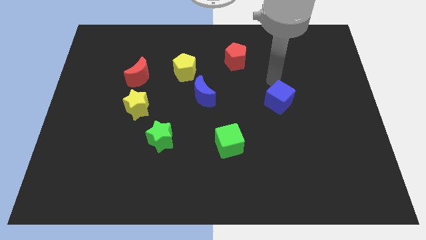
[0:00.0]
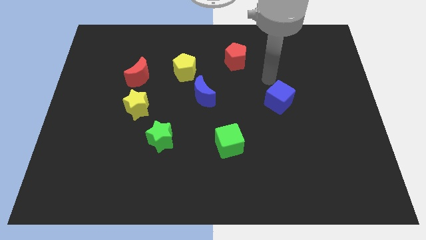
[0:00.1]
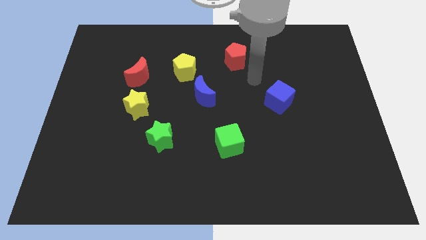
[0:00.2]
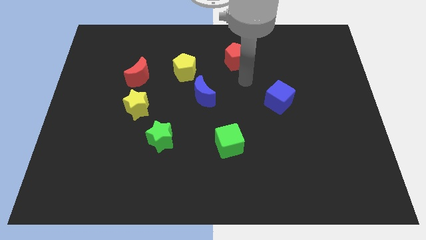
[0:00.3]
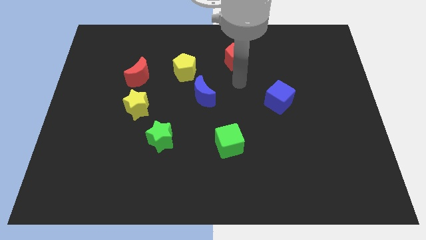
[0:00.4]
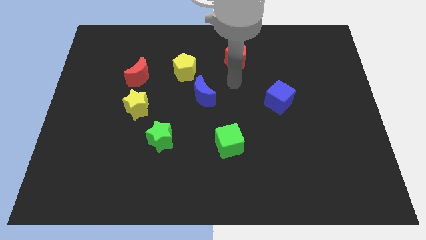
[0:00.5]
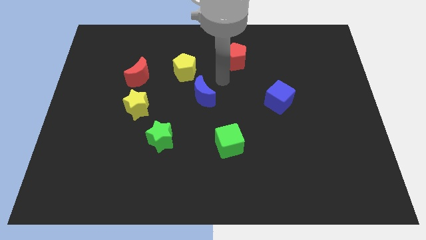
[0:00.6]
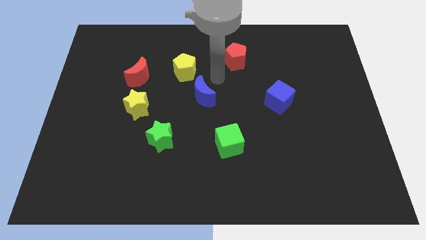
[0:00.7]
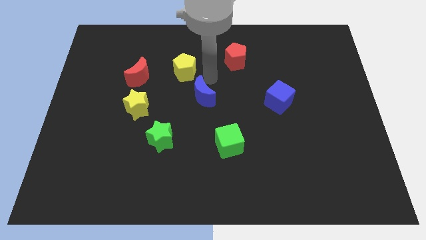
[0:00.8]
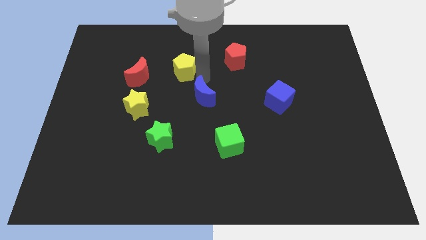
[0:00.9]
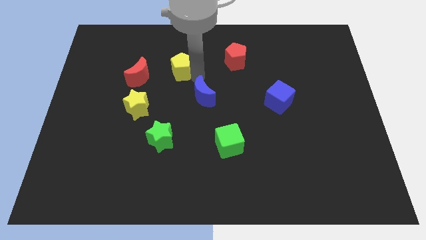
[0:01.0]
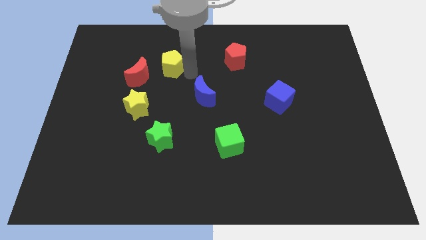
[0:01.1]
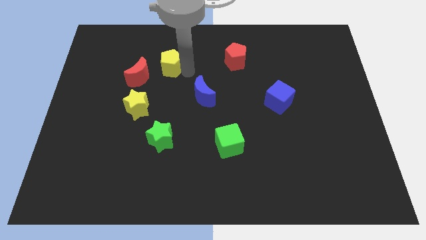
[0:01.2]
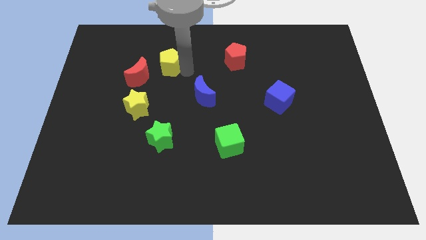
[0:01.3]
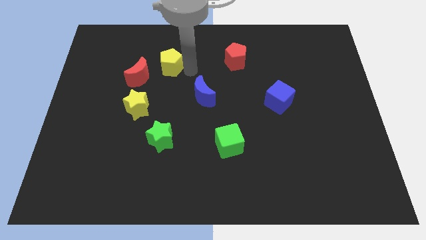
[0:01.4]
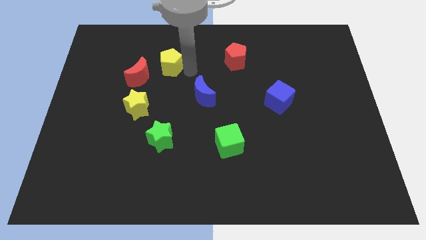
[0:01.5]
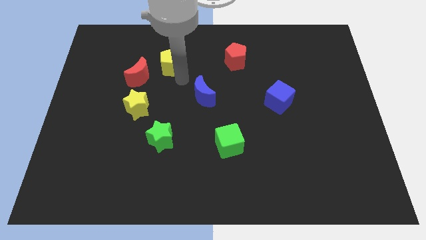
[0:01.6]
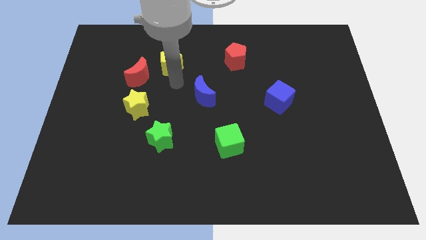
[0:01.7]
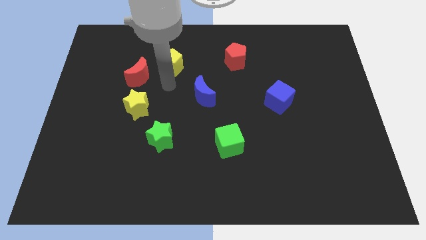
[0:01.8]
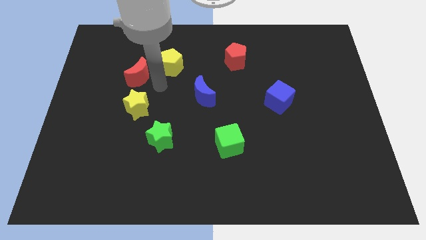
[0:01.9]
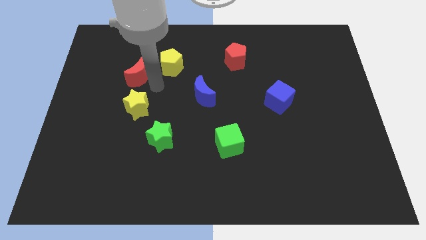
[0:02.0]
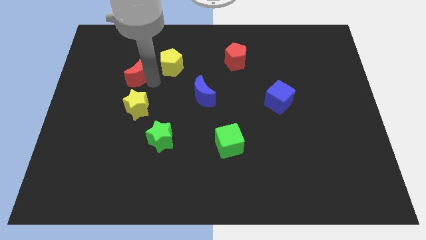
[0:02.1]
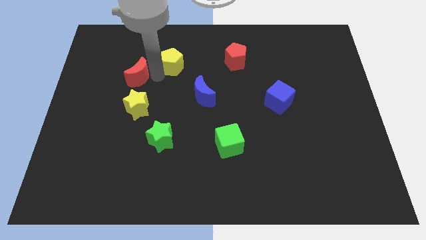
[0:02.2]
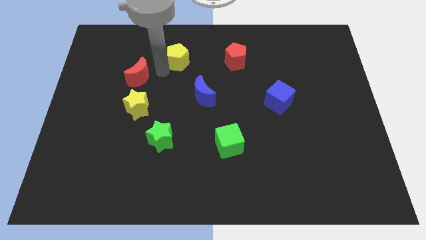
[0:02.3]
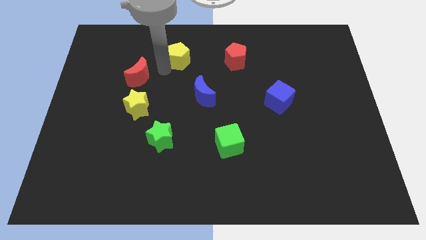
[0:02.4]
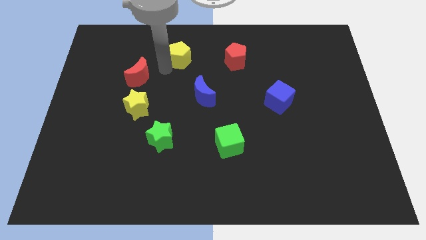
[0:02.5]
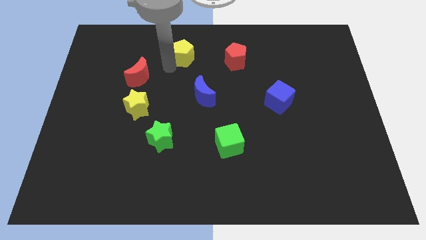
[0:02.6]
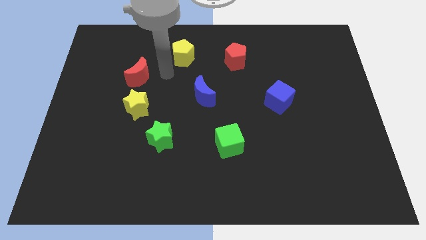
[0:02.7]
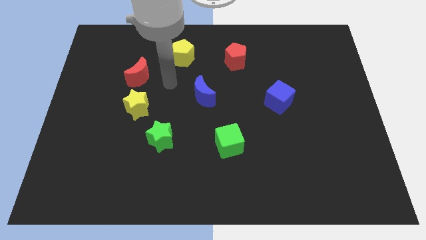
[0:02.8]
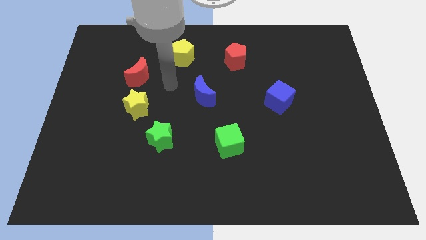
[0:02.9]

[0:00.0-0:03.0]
place the yellow pentagon to the left of the red moon

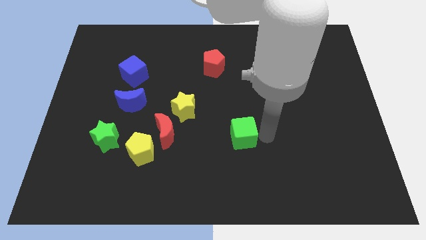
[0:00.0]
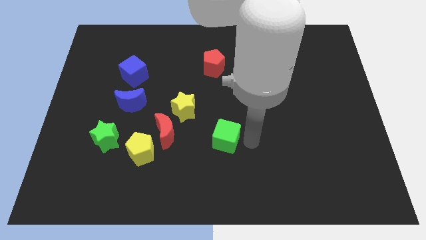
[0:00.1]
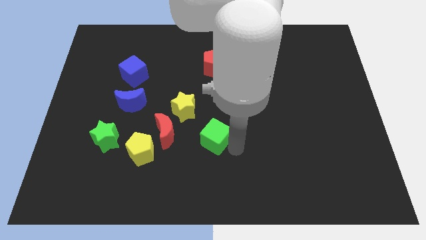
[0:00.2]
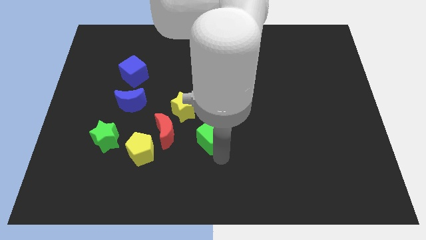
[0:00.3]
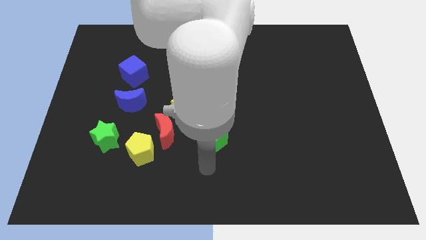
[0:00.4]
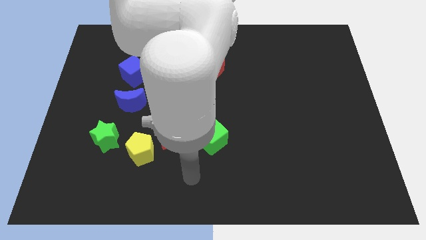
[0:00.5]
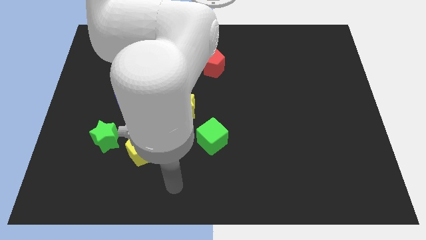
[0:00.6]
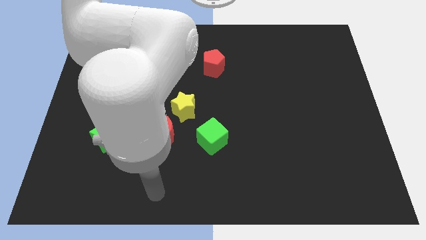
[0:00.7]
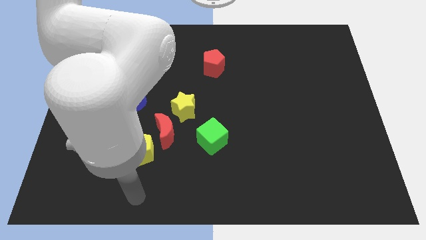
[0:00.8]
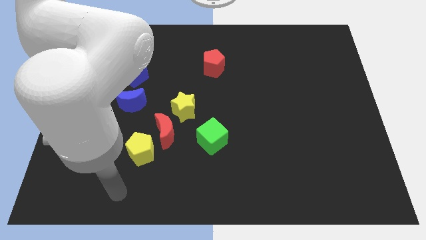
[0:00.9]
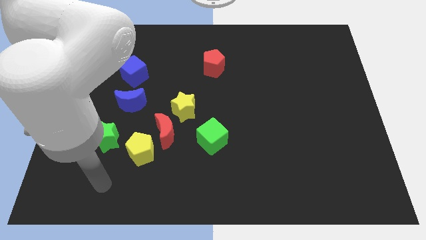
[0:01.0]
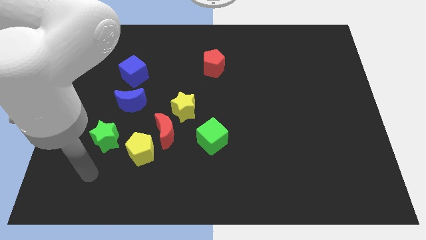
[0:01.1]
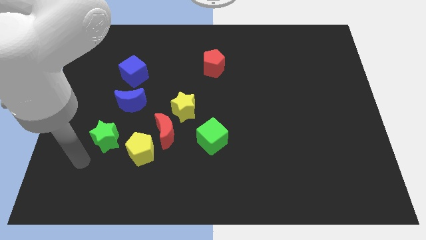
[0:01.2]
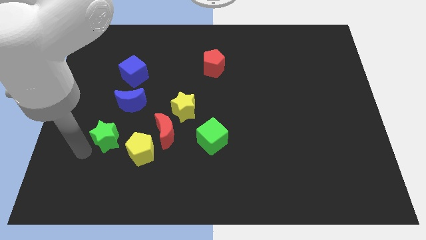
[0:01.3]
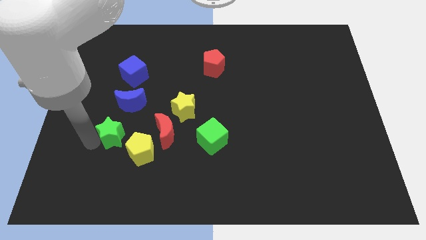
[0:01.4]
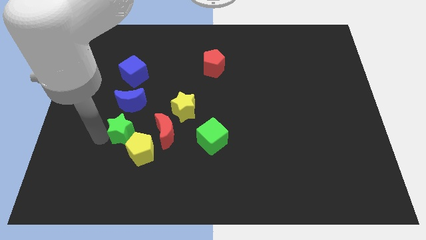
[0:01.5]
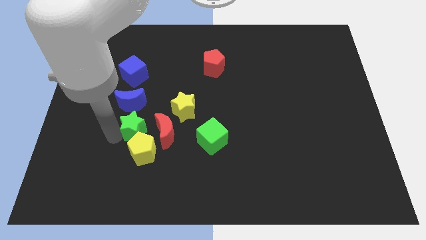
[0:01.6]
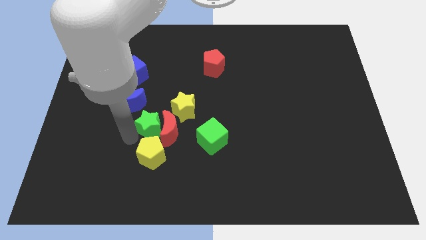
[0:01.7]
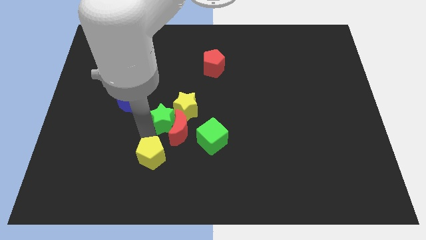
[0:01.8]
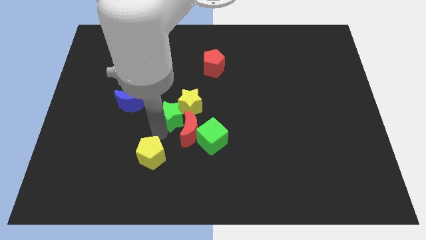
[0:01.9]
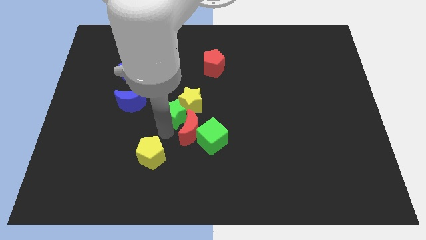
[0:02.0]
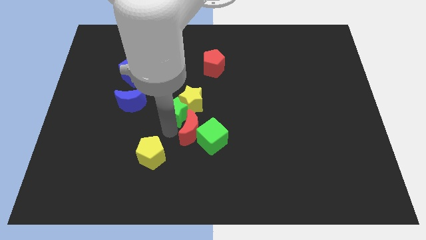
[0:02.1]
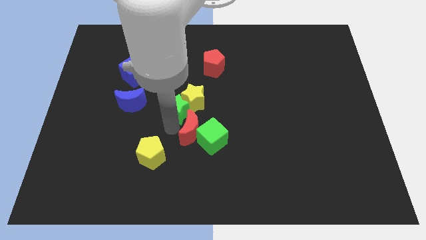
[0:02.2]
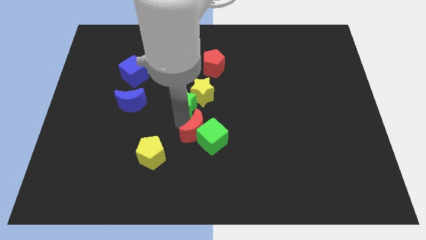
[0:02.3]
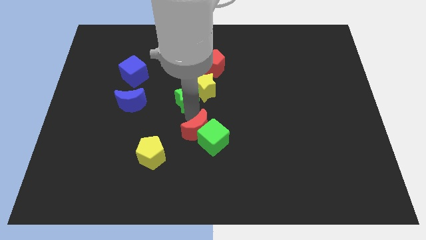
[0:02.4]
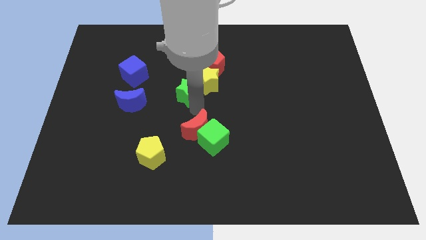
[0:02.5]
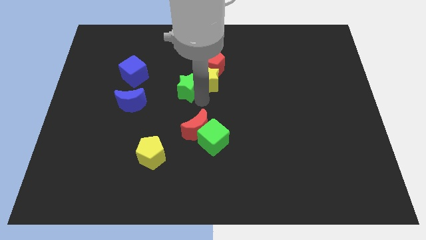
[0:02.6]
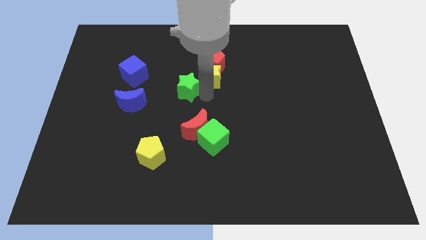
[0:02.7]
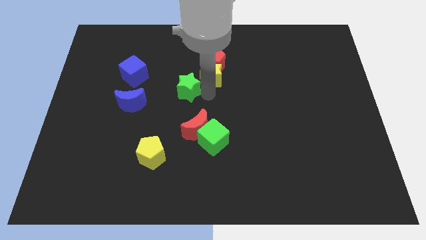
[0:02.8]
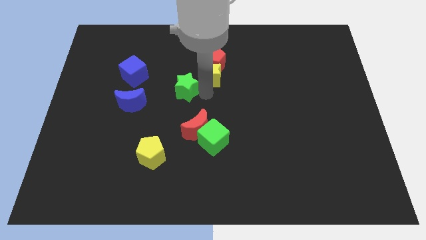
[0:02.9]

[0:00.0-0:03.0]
push the green star into the yellow star

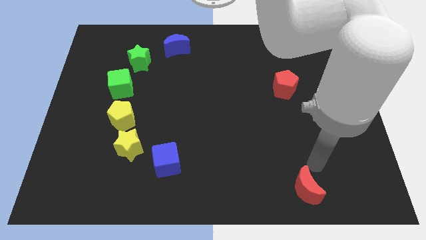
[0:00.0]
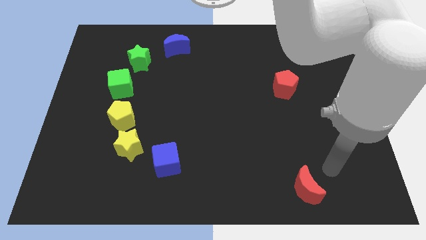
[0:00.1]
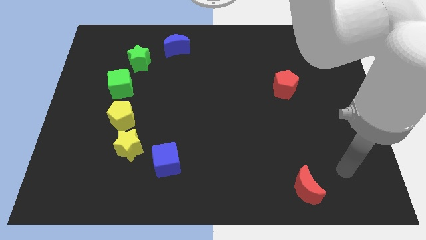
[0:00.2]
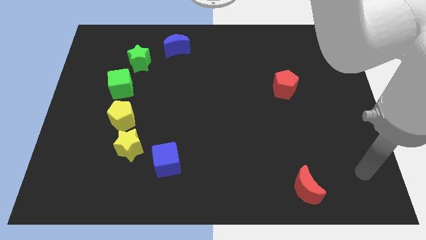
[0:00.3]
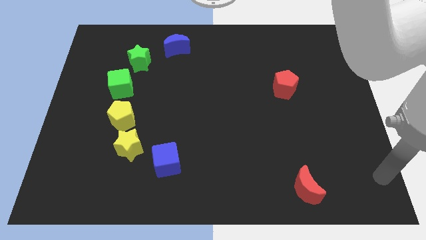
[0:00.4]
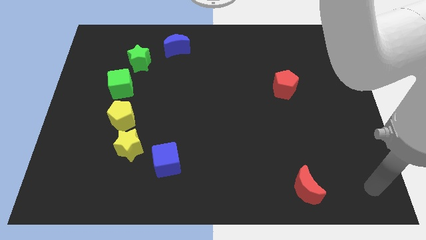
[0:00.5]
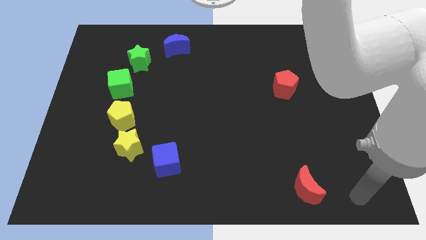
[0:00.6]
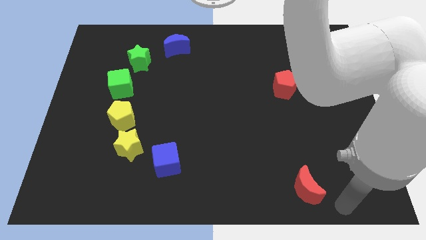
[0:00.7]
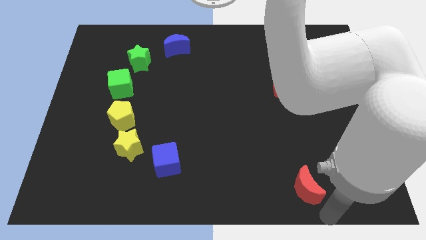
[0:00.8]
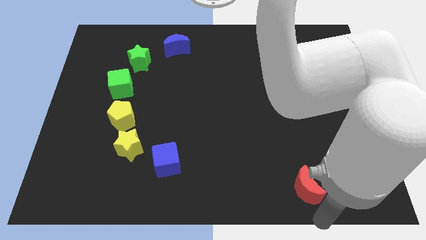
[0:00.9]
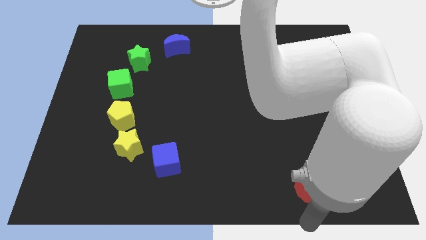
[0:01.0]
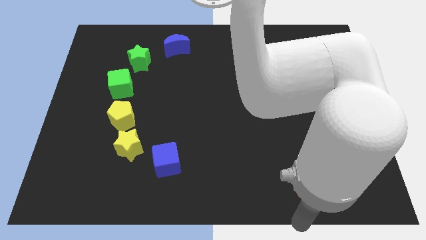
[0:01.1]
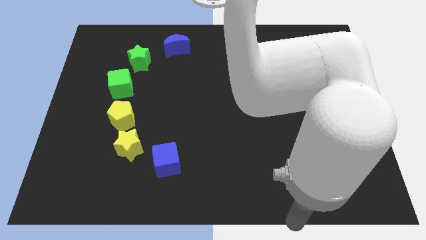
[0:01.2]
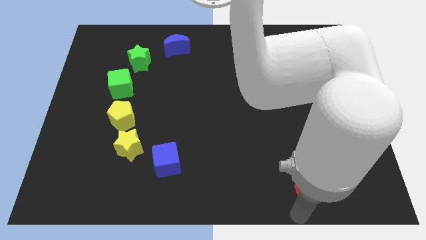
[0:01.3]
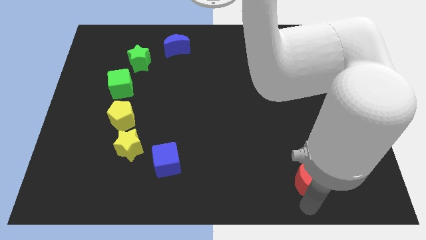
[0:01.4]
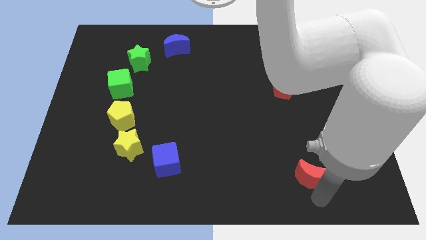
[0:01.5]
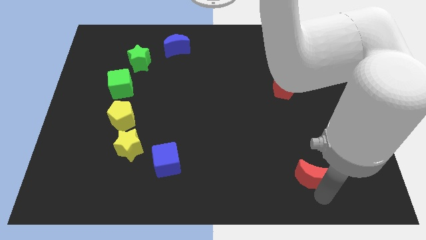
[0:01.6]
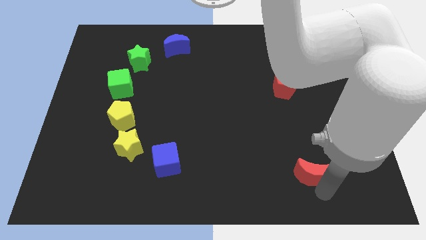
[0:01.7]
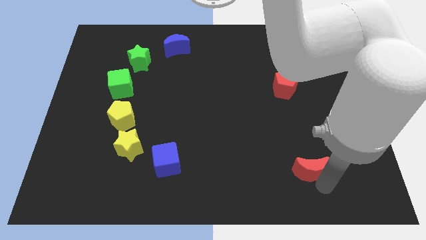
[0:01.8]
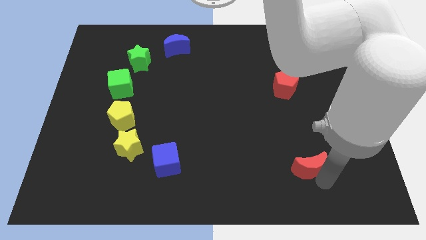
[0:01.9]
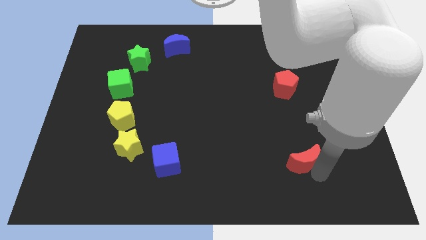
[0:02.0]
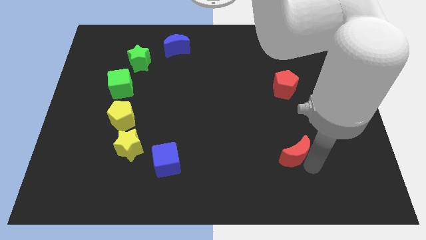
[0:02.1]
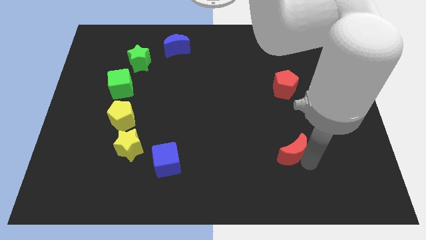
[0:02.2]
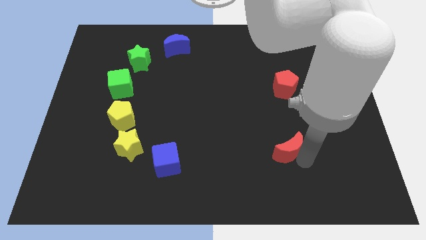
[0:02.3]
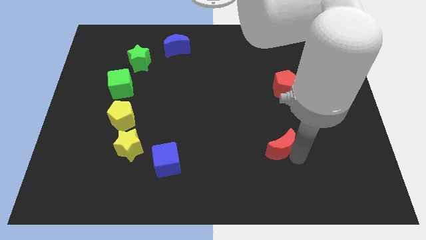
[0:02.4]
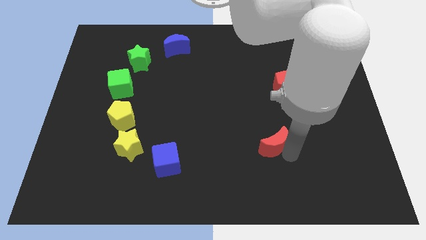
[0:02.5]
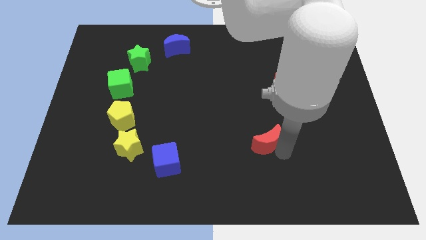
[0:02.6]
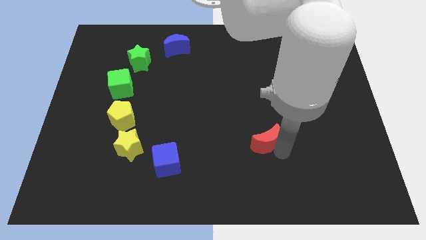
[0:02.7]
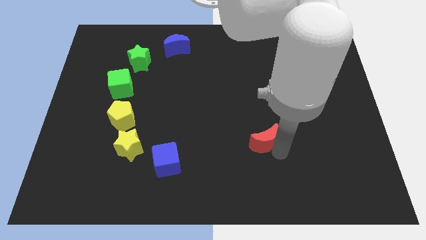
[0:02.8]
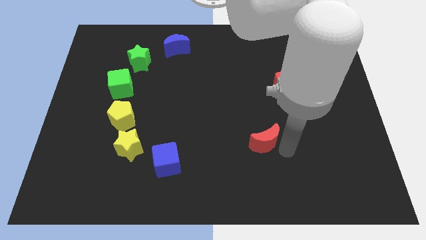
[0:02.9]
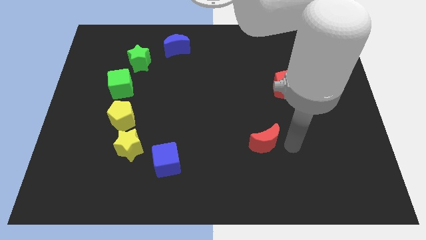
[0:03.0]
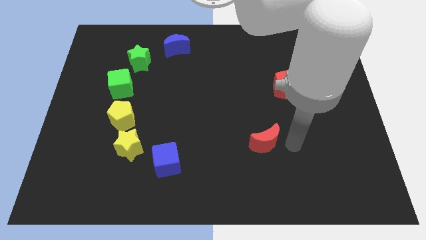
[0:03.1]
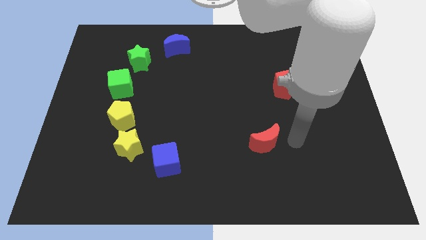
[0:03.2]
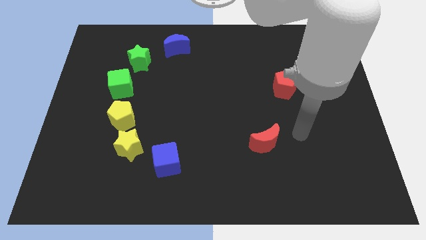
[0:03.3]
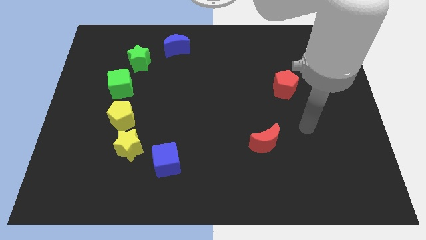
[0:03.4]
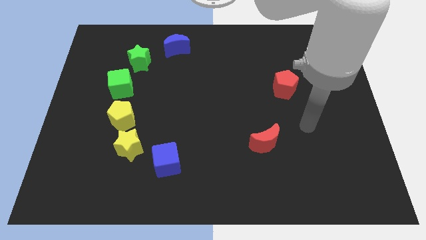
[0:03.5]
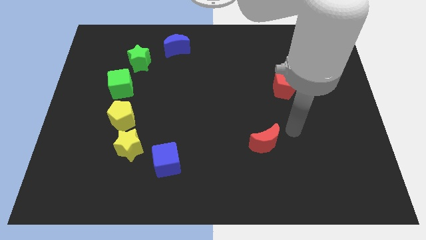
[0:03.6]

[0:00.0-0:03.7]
push red moon upwards
